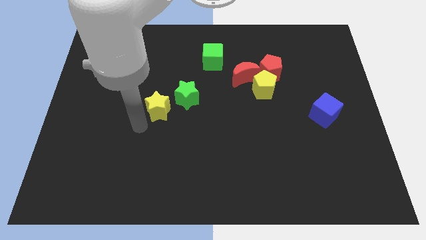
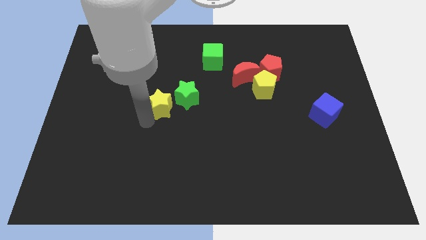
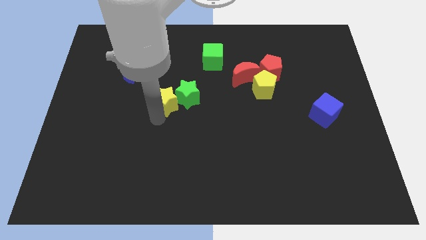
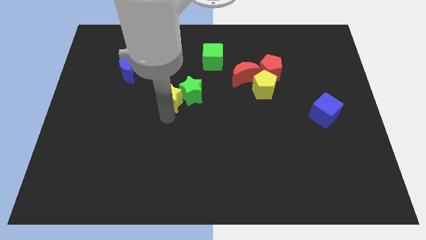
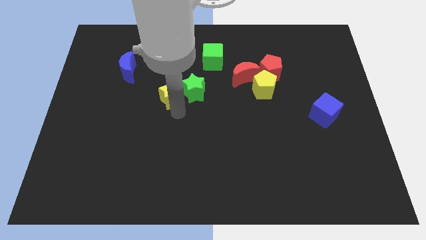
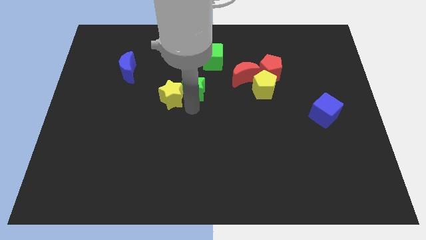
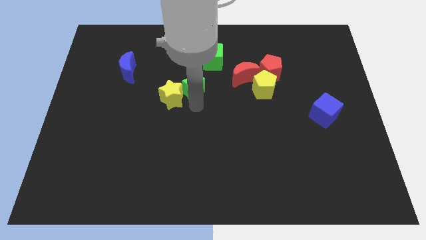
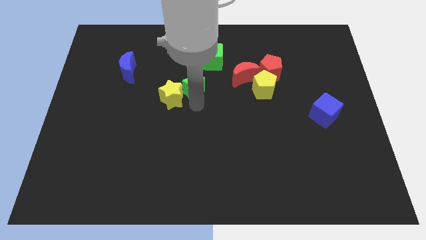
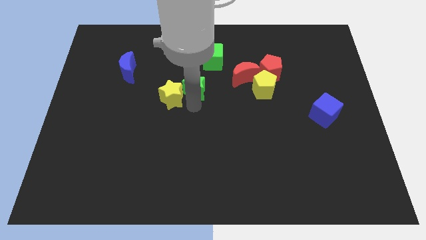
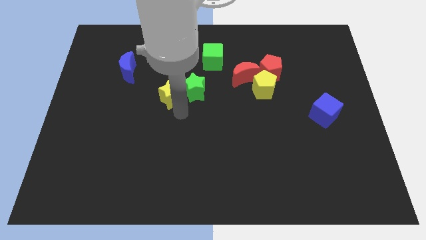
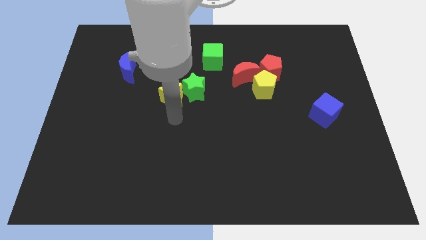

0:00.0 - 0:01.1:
slide yellow star into green star

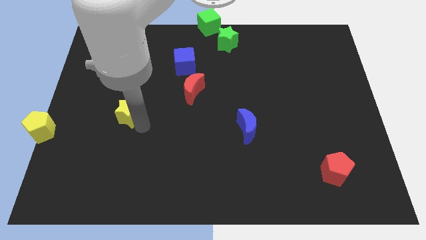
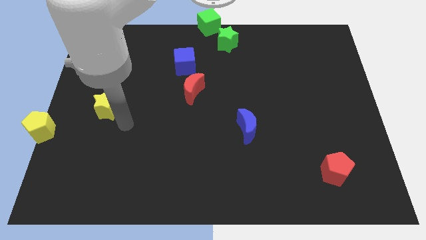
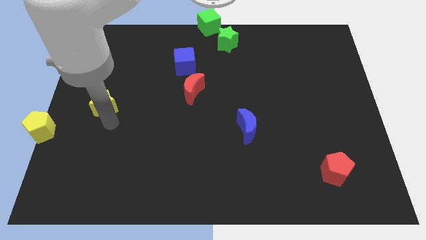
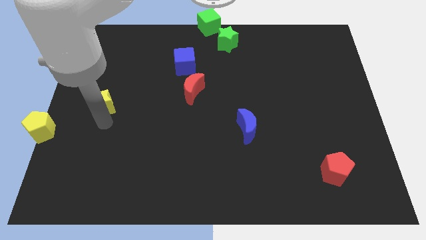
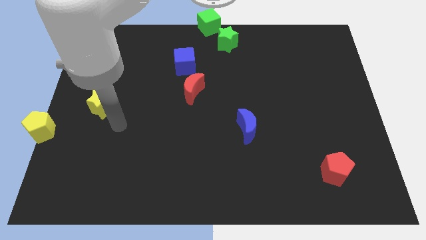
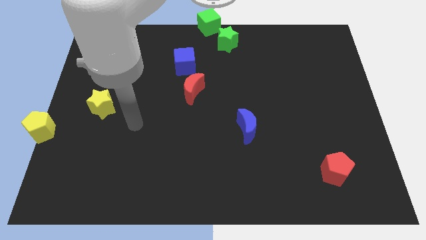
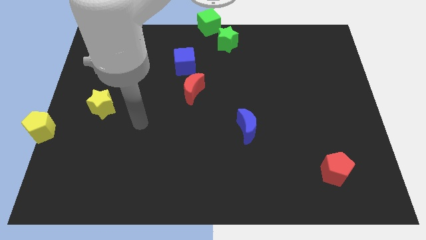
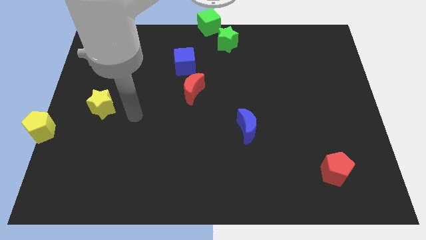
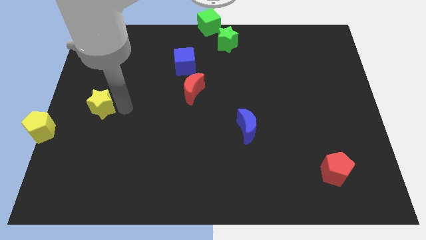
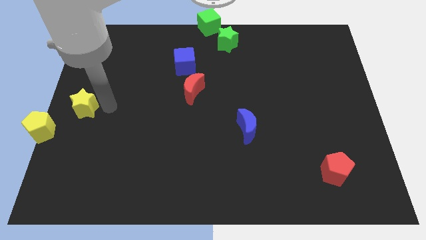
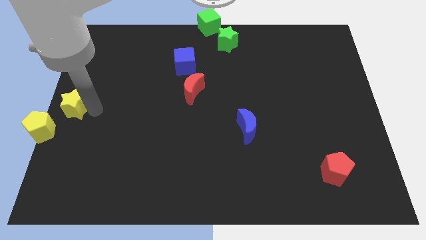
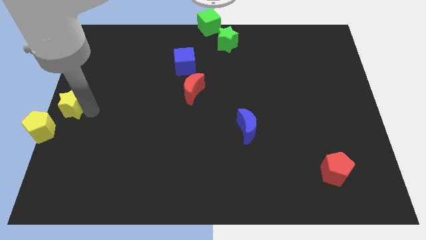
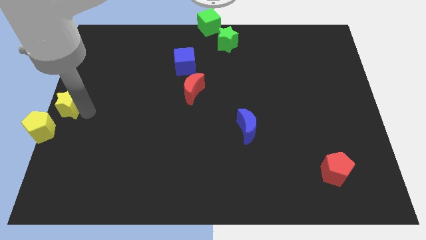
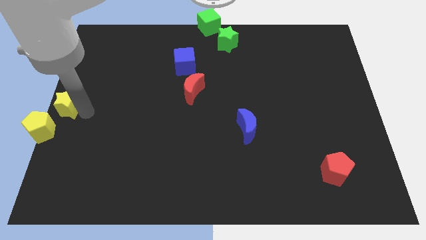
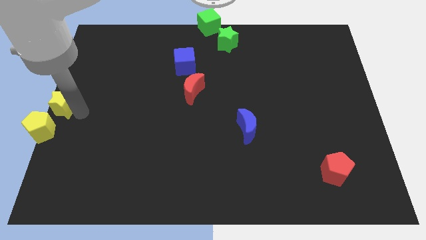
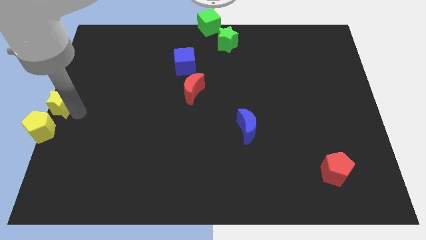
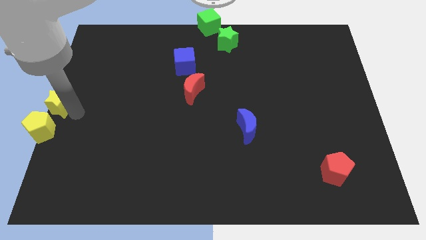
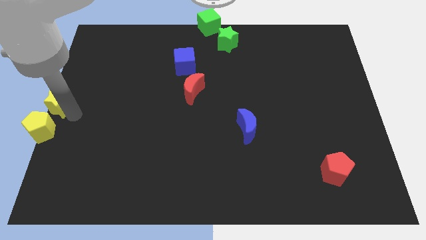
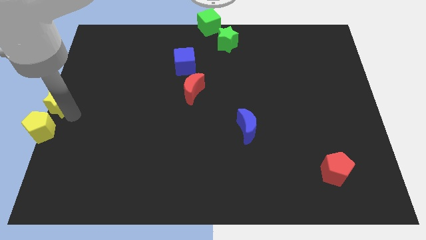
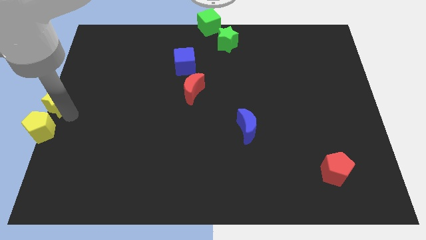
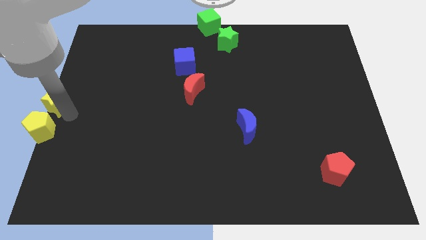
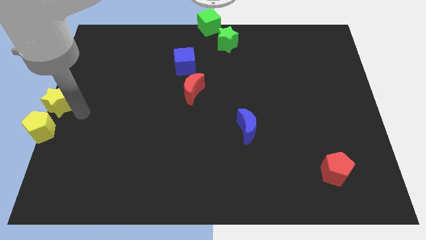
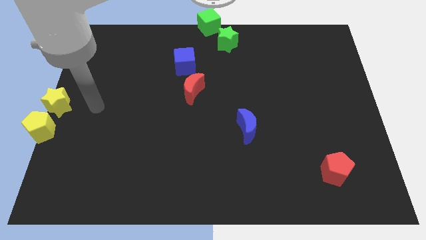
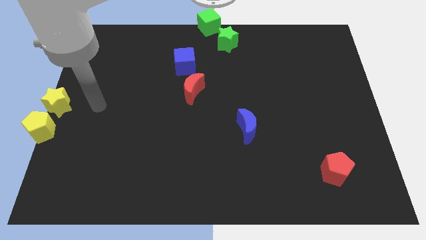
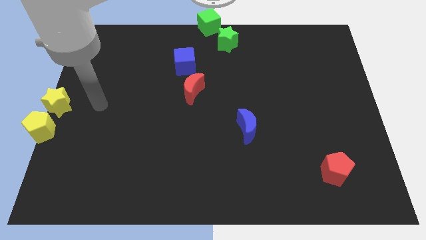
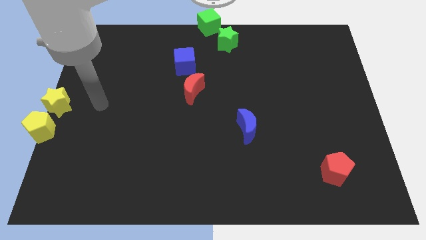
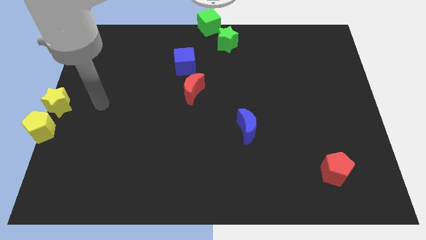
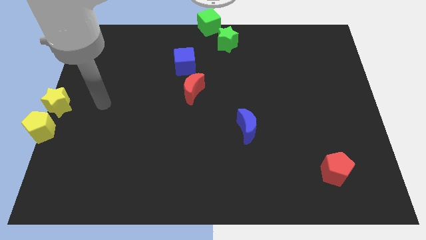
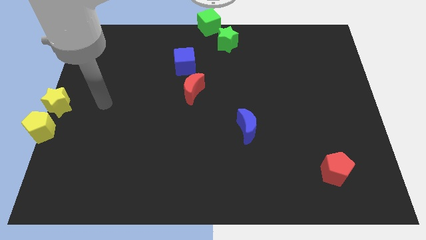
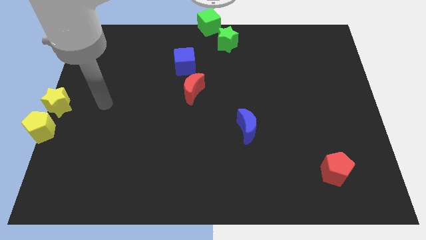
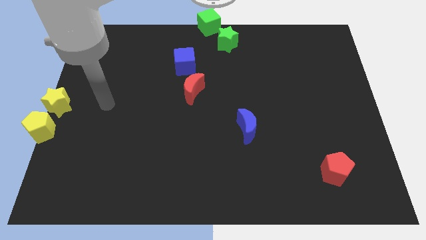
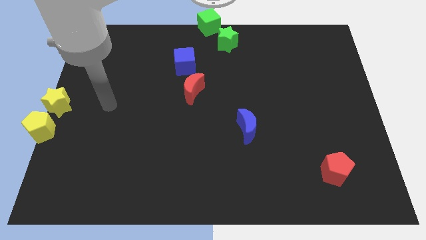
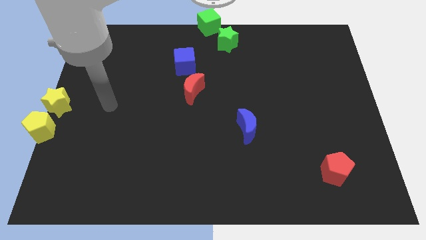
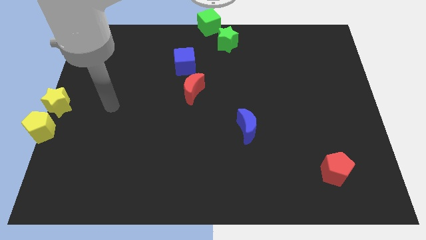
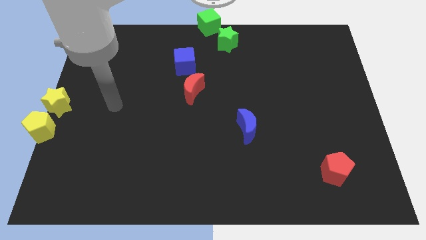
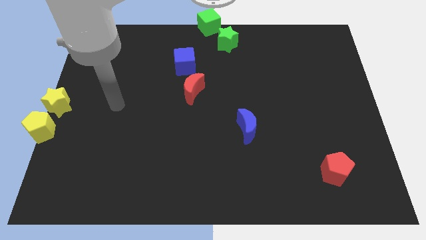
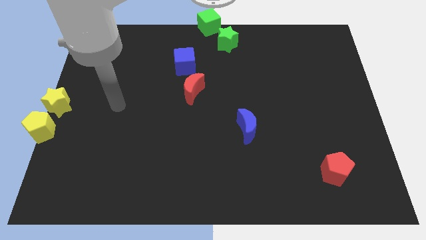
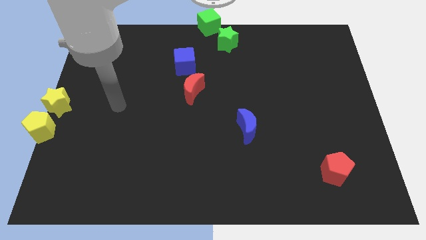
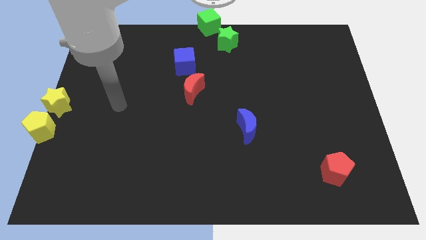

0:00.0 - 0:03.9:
place the yellow star above the yellow pentagon

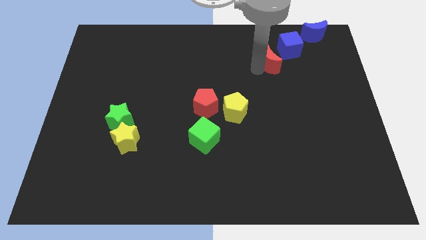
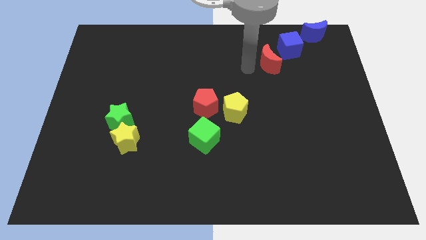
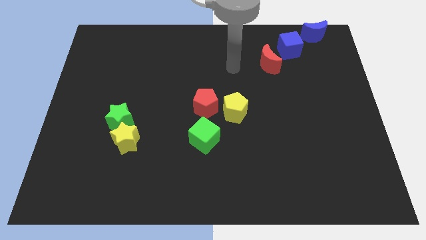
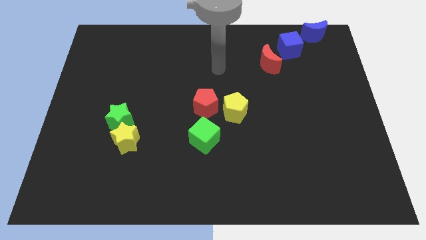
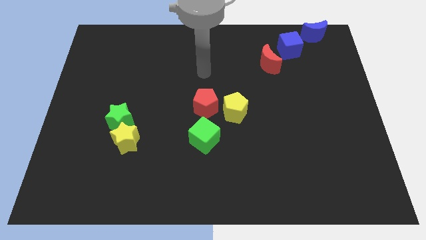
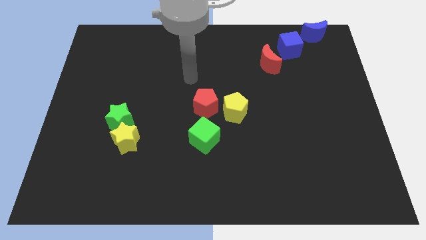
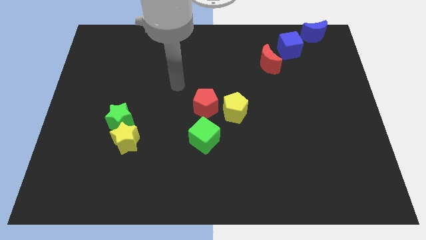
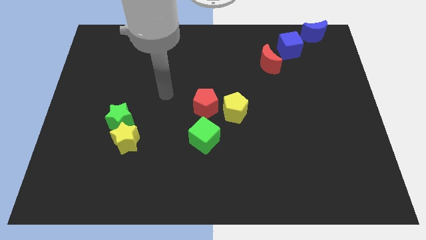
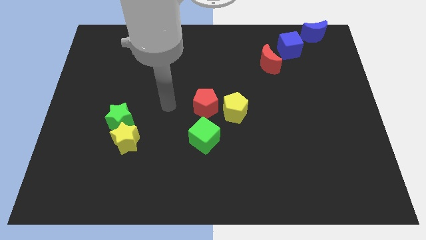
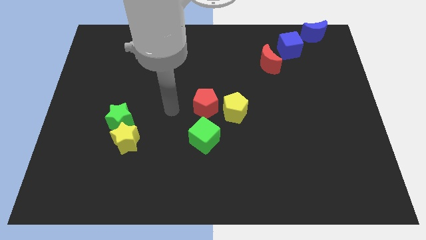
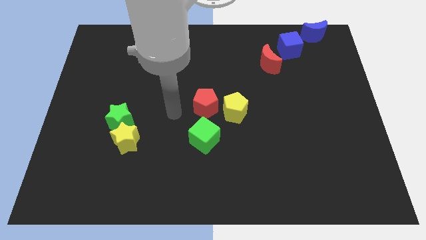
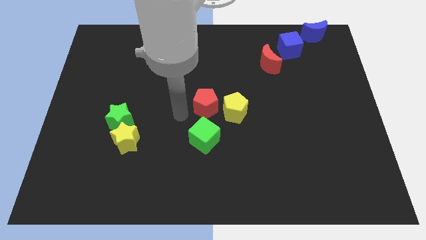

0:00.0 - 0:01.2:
point your arm to the left side of red pentagon

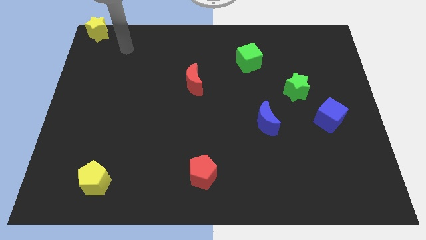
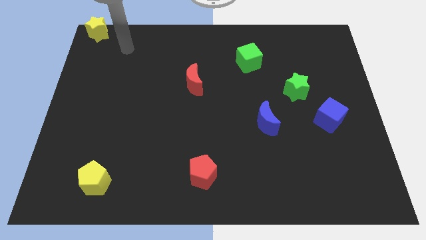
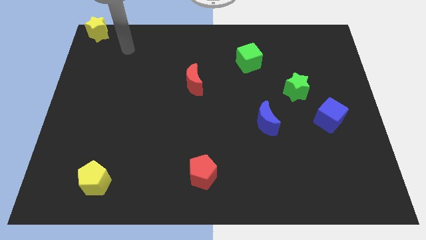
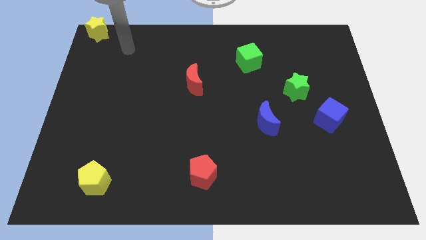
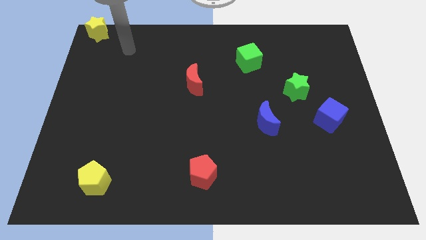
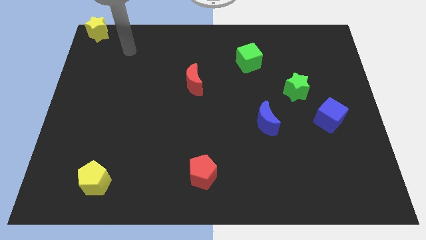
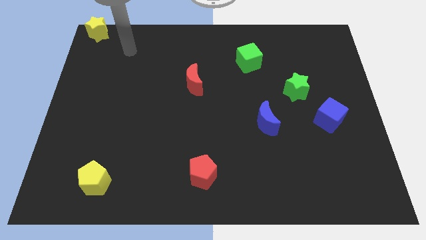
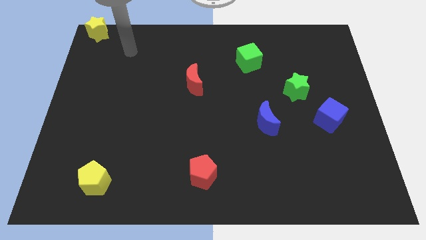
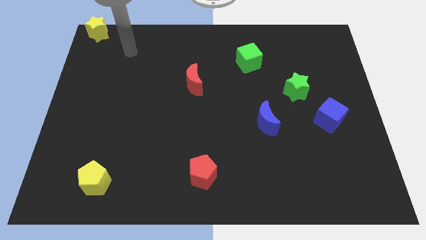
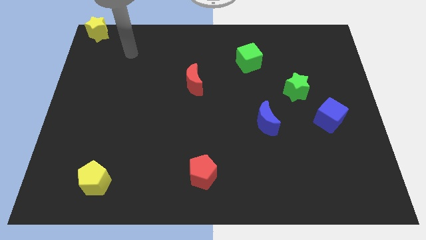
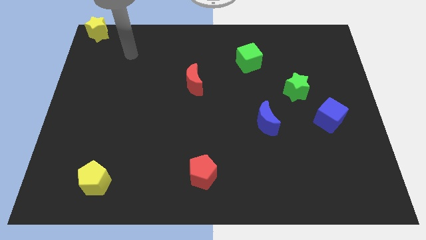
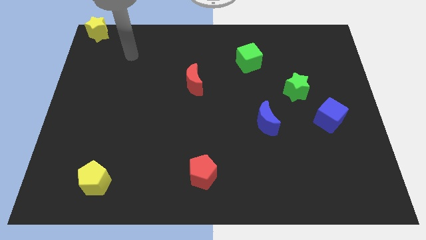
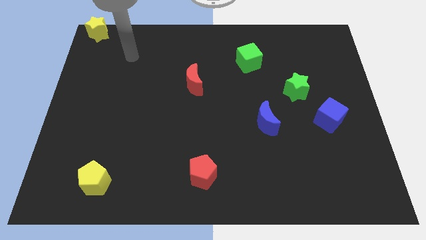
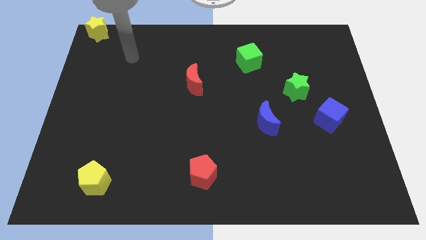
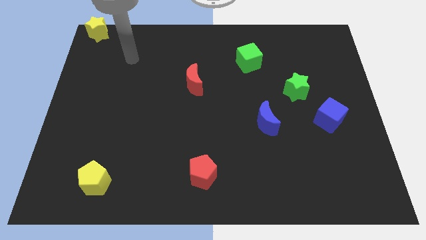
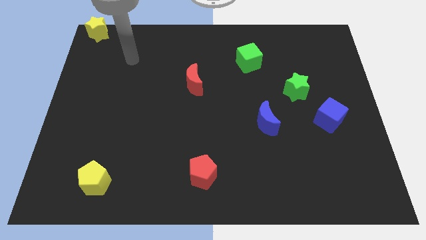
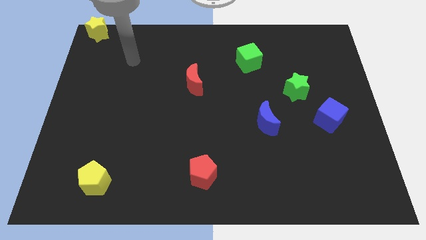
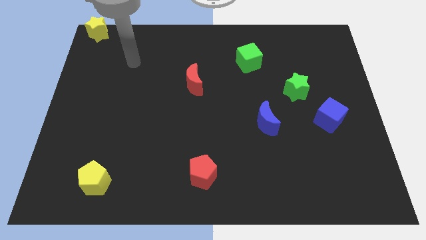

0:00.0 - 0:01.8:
move the arm slightly down of the board

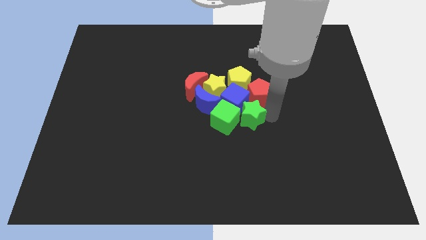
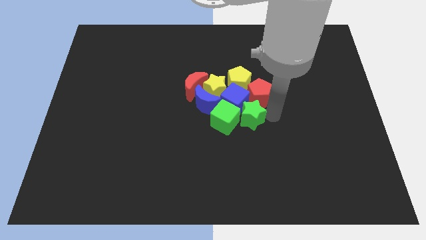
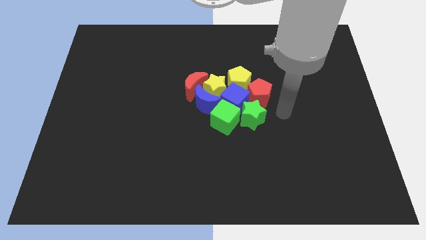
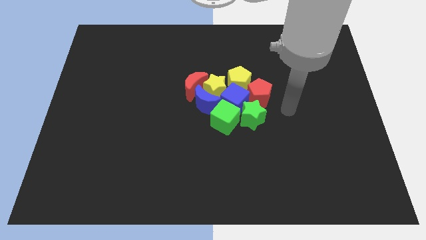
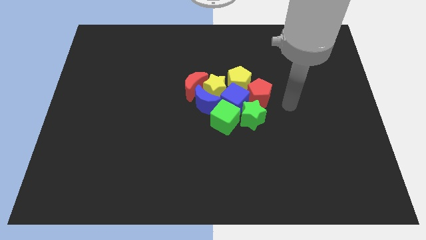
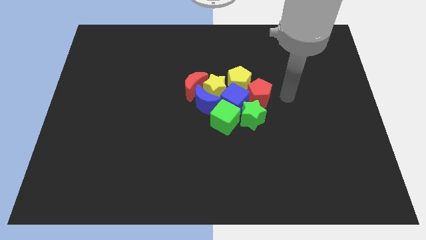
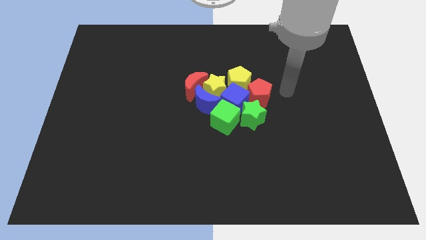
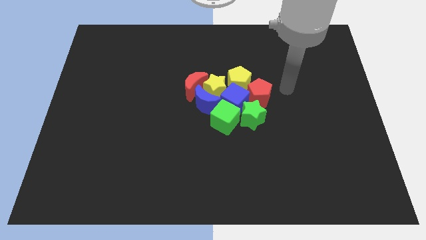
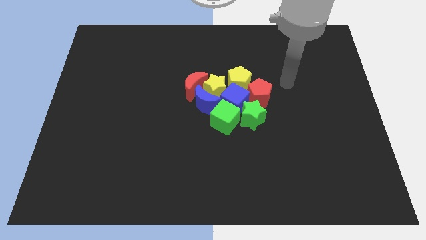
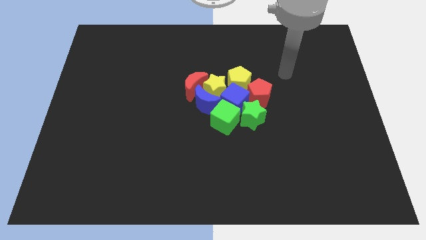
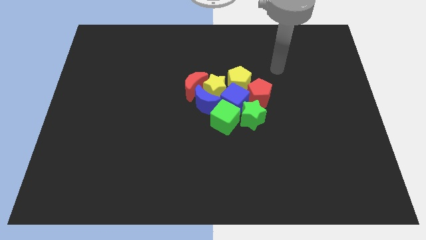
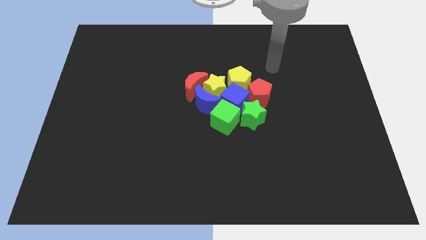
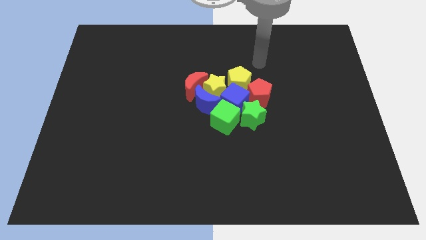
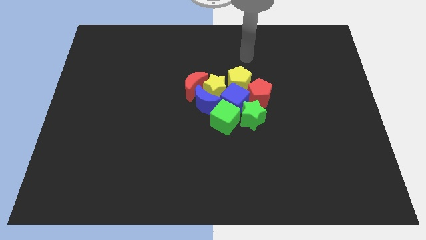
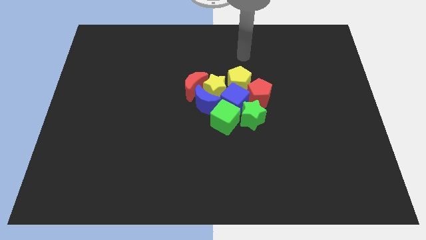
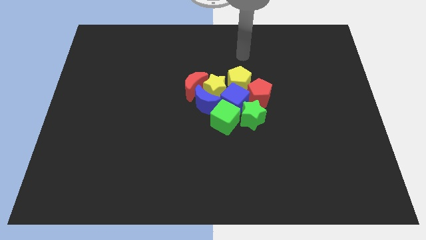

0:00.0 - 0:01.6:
move your hand at the top of the yellow pentagon
